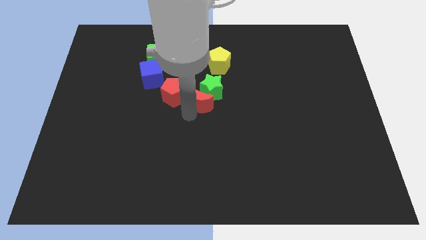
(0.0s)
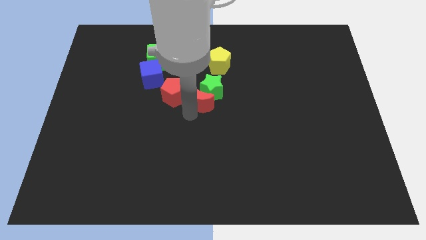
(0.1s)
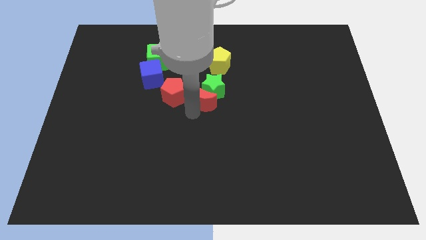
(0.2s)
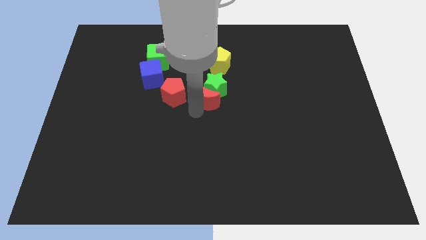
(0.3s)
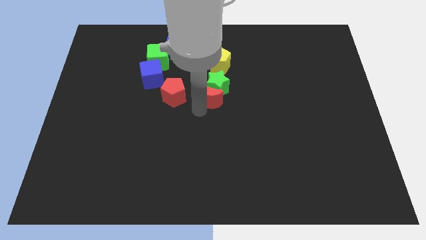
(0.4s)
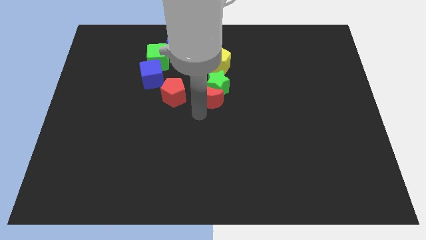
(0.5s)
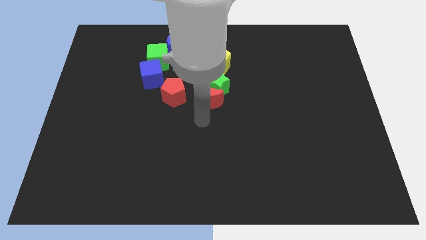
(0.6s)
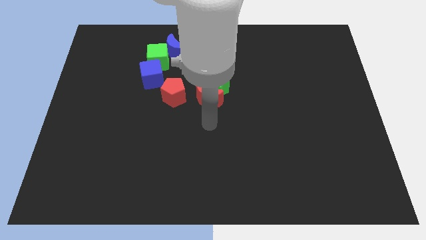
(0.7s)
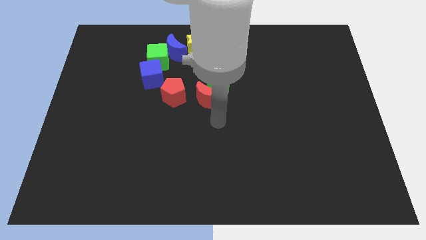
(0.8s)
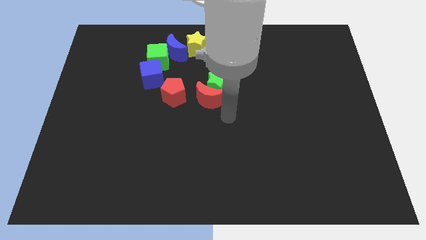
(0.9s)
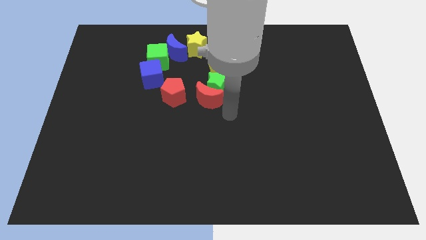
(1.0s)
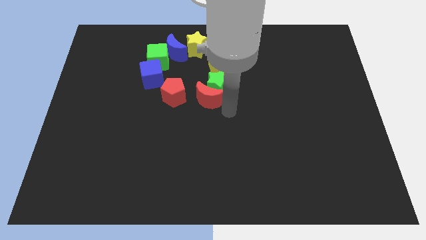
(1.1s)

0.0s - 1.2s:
slide red moon and the green star into the yellow pentagon

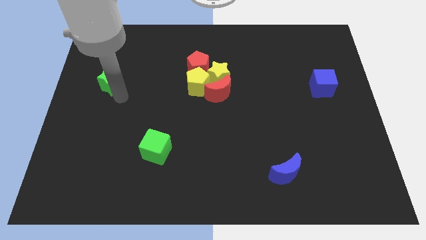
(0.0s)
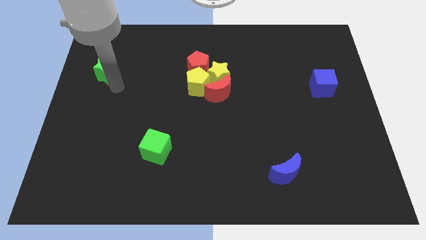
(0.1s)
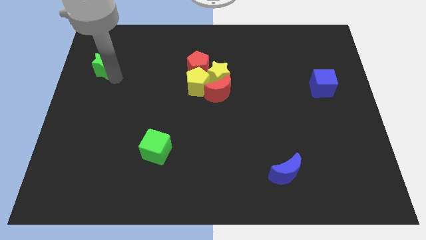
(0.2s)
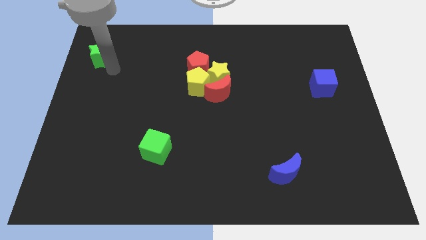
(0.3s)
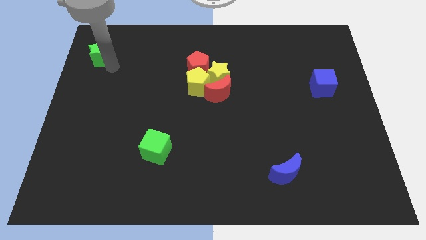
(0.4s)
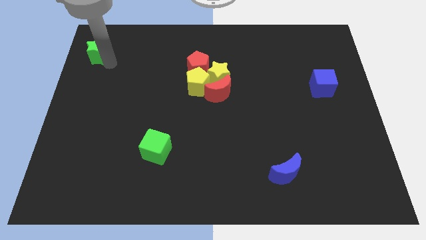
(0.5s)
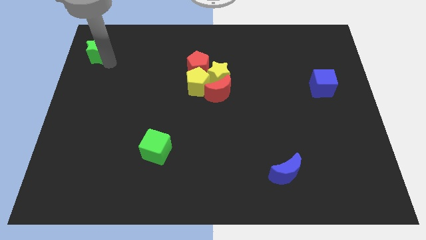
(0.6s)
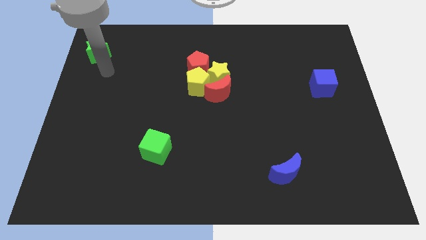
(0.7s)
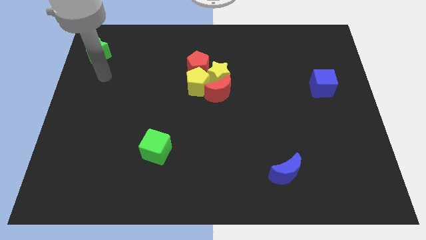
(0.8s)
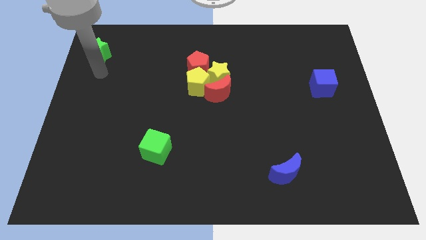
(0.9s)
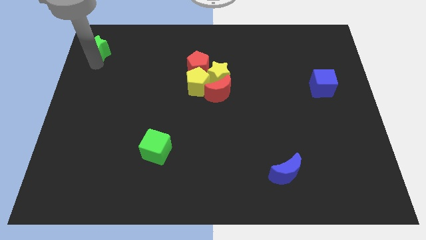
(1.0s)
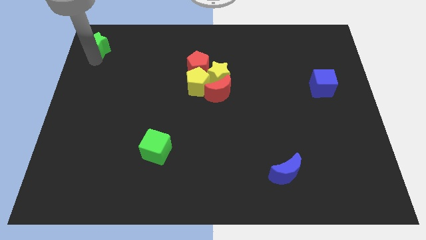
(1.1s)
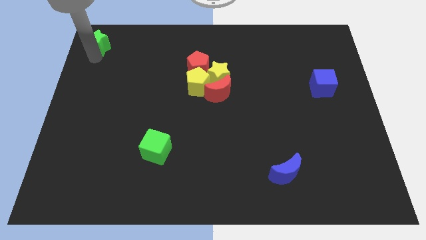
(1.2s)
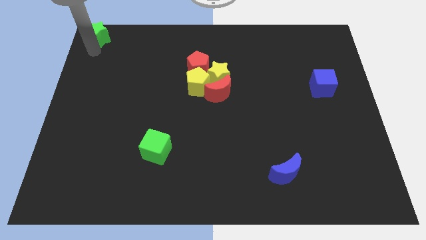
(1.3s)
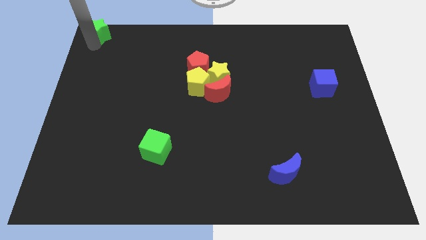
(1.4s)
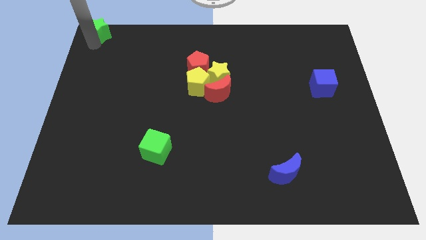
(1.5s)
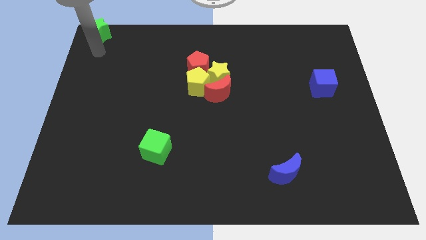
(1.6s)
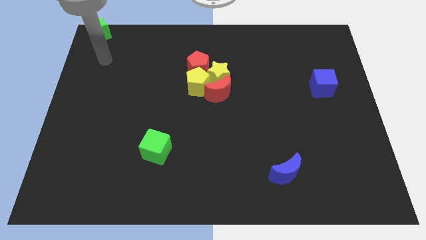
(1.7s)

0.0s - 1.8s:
place the green star on the top left of the board

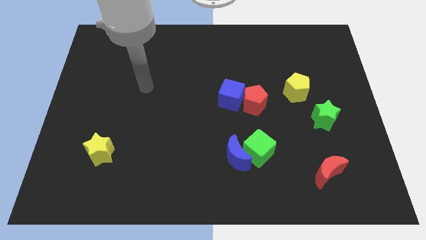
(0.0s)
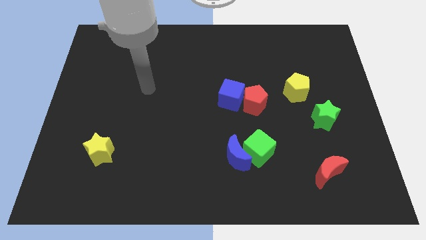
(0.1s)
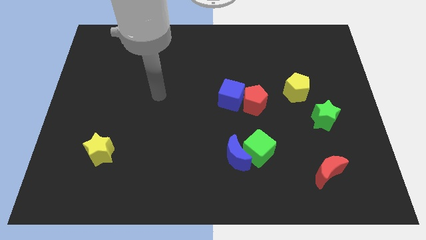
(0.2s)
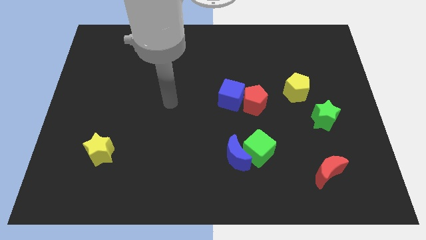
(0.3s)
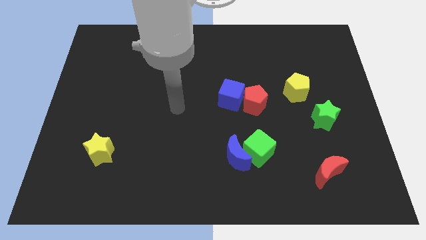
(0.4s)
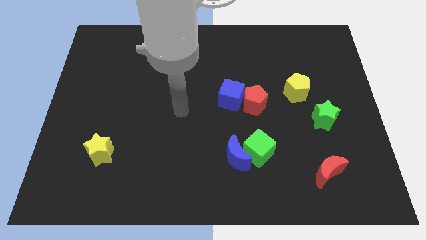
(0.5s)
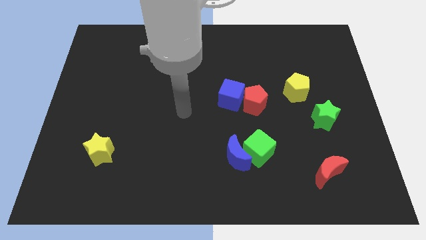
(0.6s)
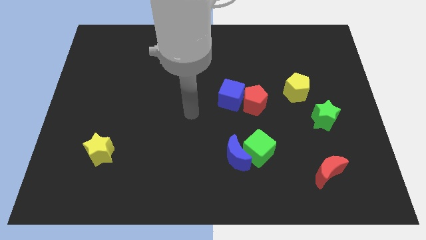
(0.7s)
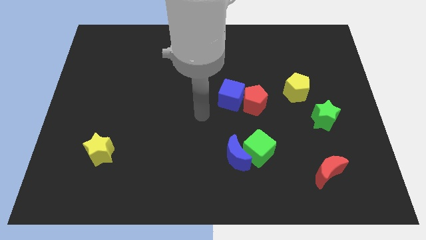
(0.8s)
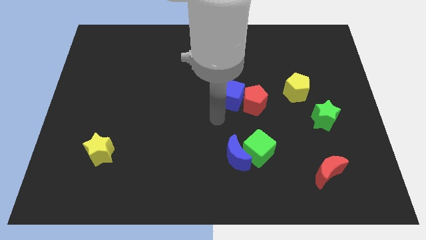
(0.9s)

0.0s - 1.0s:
place arm at center

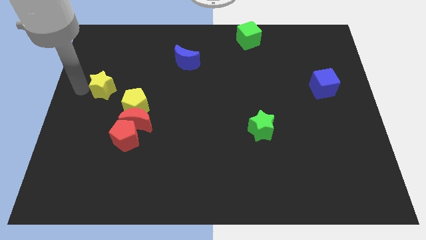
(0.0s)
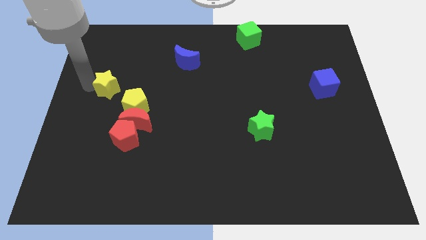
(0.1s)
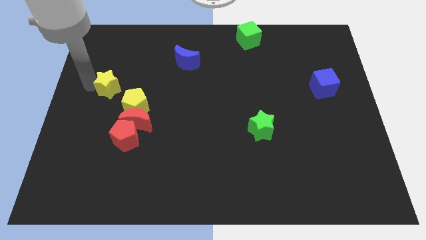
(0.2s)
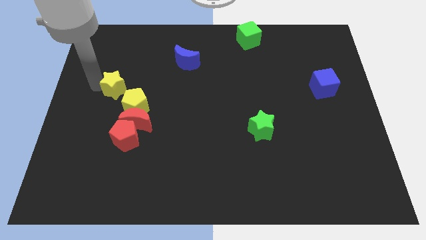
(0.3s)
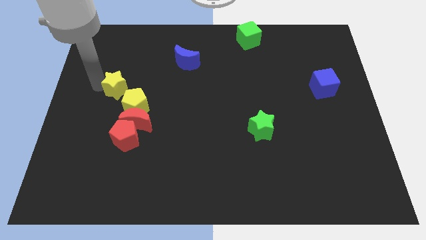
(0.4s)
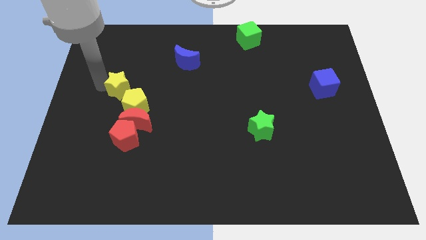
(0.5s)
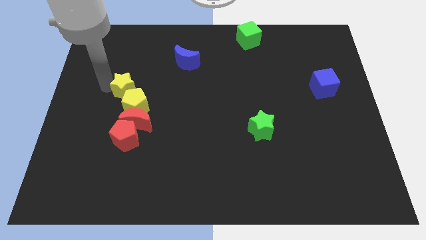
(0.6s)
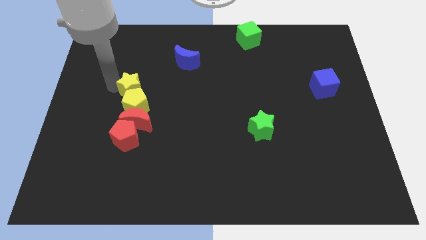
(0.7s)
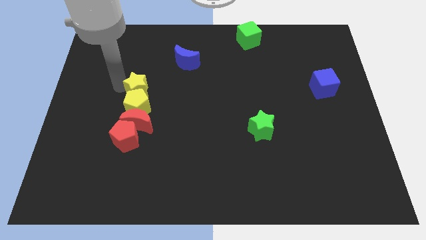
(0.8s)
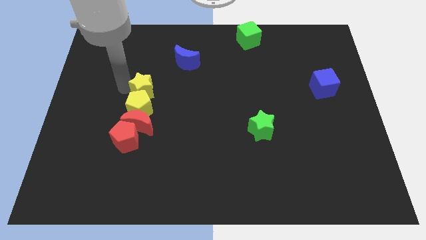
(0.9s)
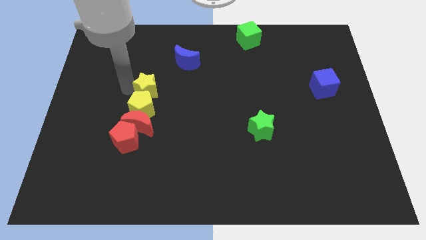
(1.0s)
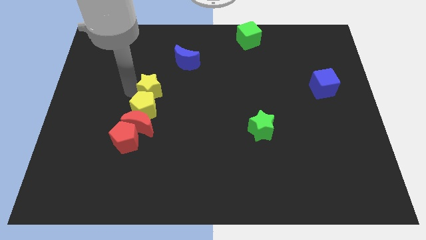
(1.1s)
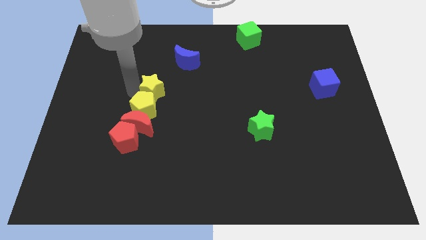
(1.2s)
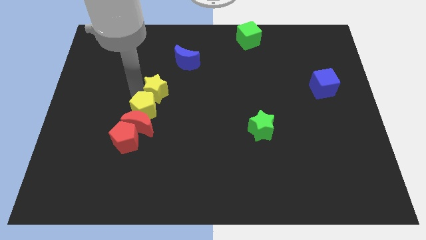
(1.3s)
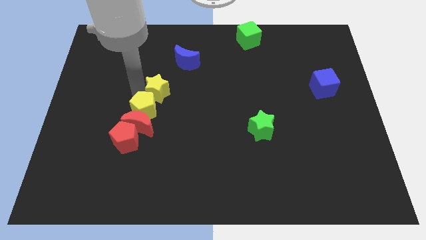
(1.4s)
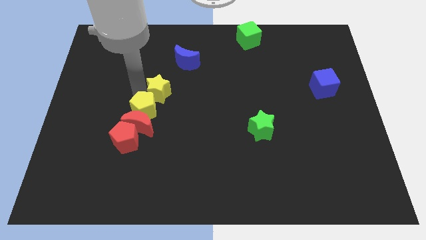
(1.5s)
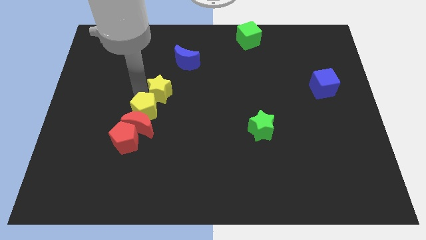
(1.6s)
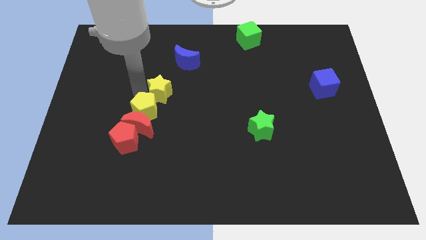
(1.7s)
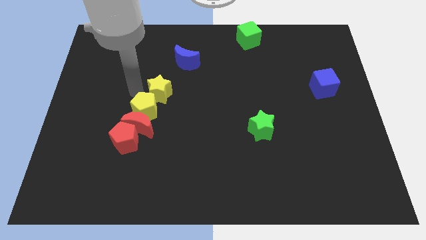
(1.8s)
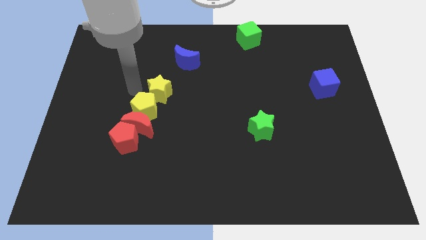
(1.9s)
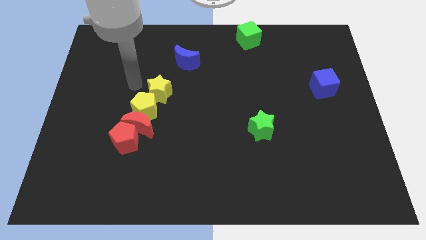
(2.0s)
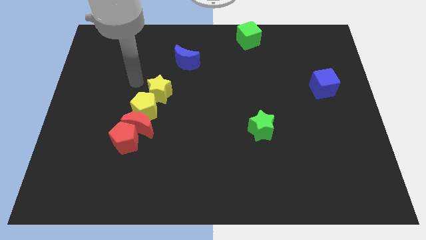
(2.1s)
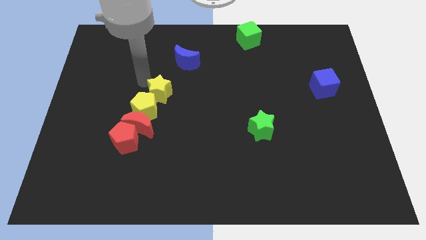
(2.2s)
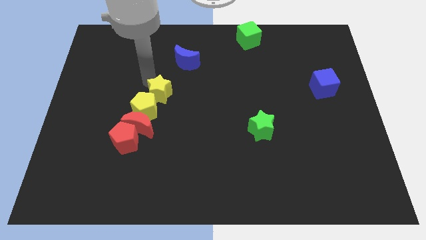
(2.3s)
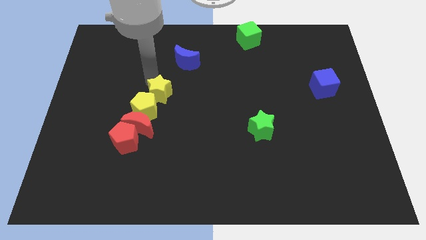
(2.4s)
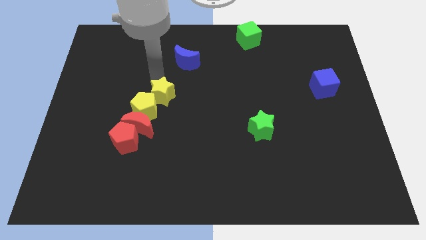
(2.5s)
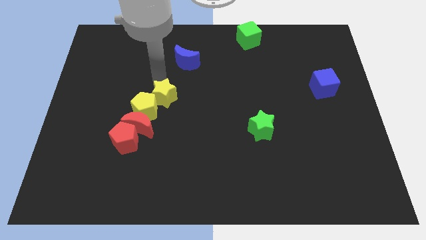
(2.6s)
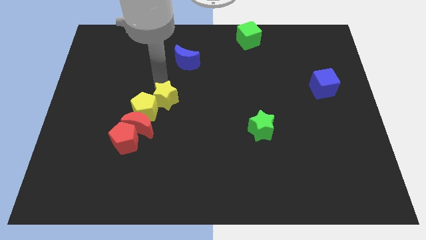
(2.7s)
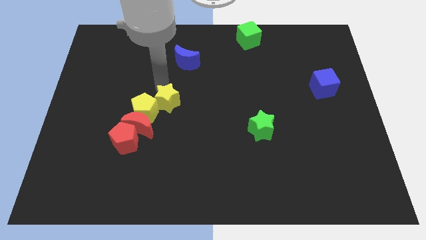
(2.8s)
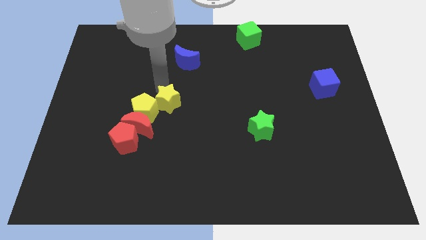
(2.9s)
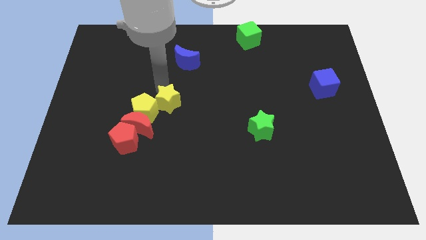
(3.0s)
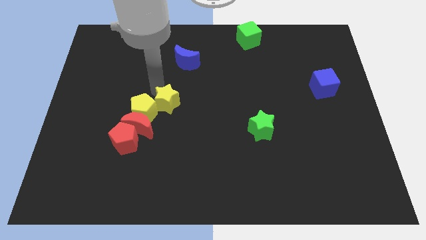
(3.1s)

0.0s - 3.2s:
place the yellow star at the top right of the yellow pentagon

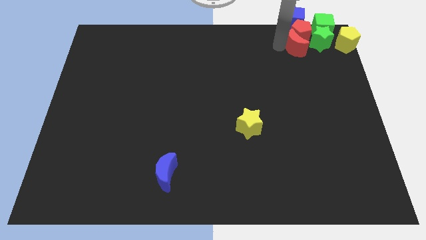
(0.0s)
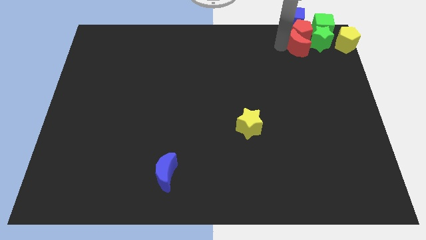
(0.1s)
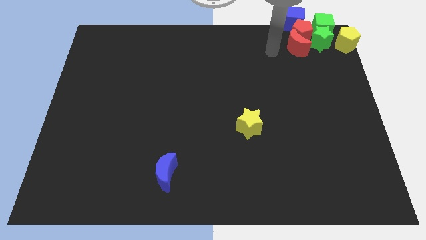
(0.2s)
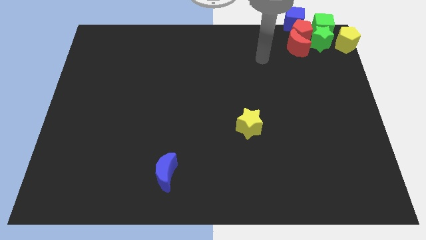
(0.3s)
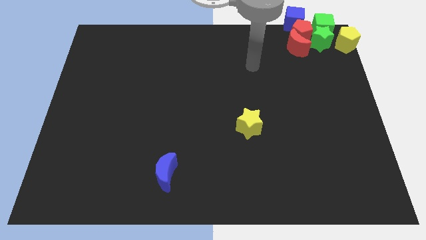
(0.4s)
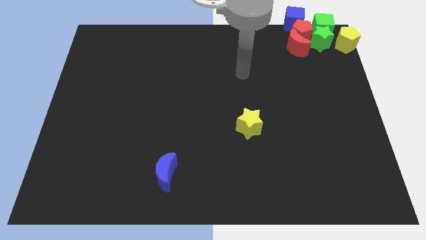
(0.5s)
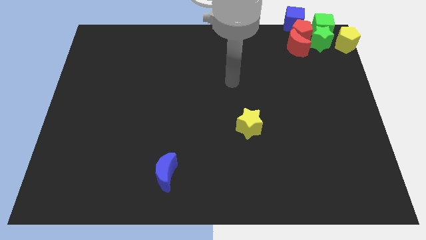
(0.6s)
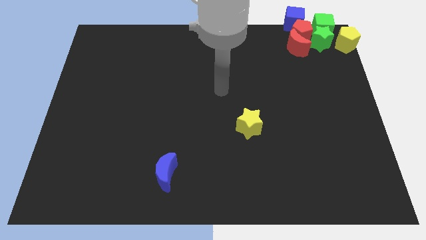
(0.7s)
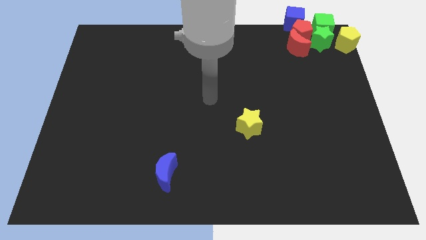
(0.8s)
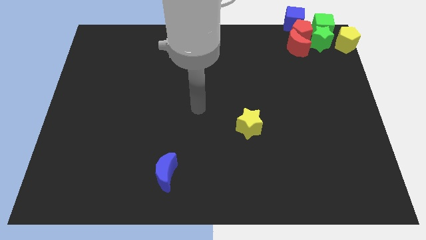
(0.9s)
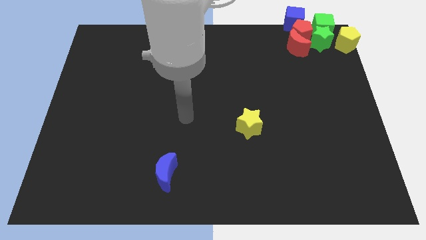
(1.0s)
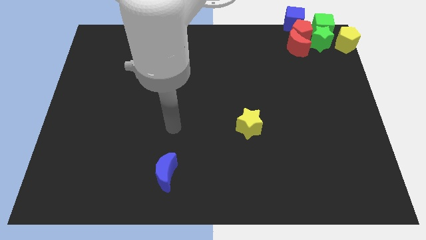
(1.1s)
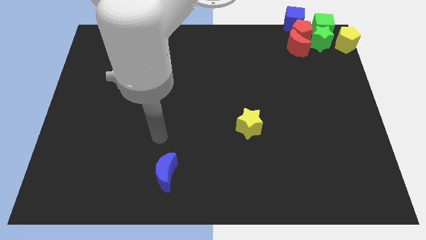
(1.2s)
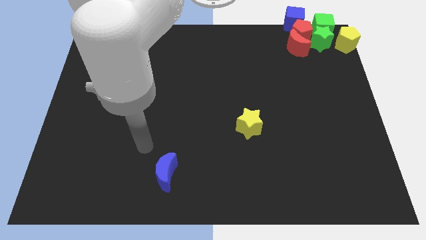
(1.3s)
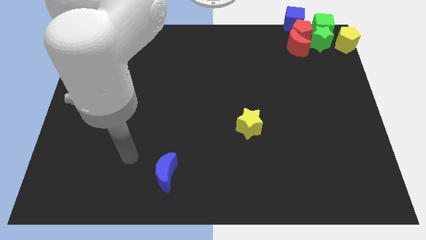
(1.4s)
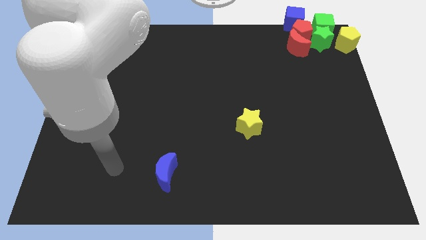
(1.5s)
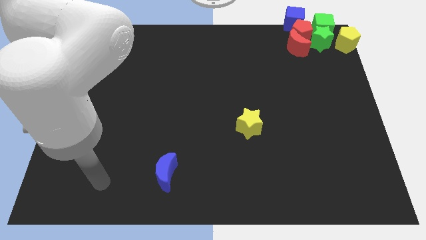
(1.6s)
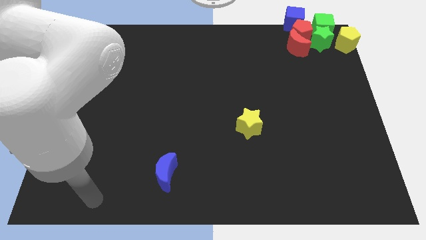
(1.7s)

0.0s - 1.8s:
push your hand diagonally towards the bottom left side
